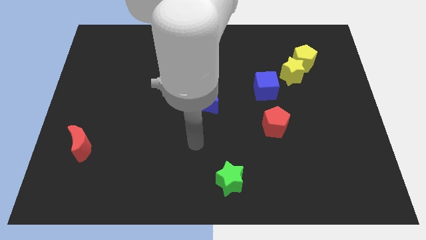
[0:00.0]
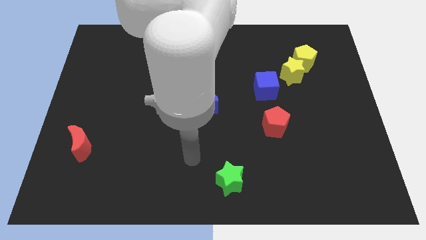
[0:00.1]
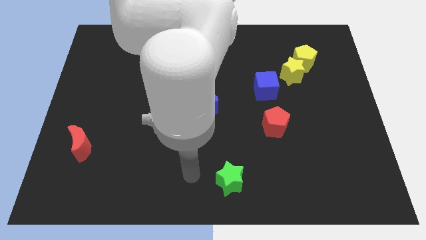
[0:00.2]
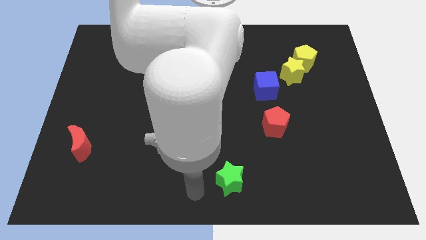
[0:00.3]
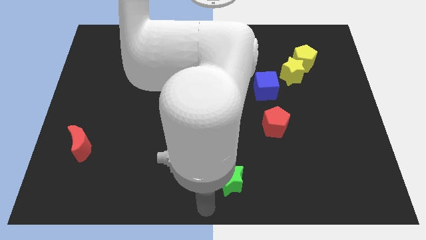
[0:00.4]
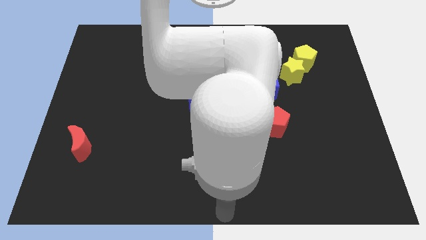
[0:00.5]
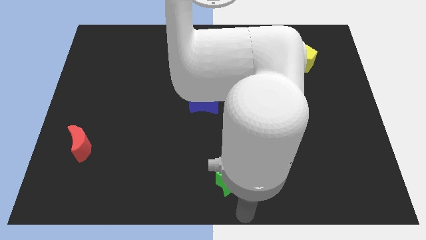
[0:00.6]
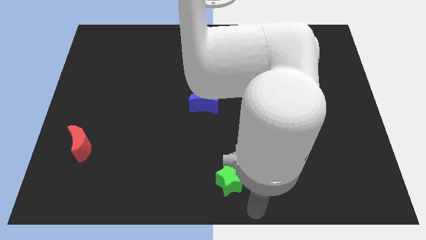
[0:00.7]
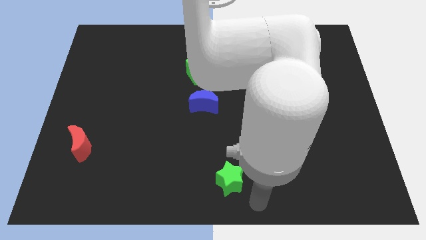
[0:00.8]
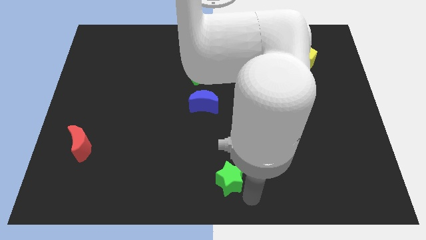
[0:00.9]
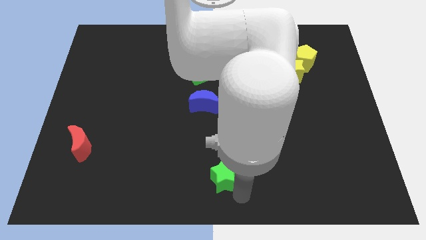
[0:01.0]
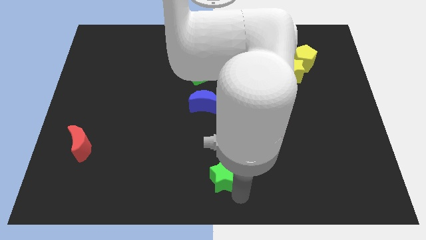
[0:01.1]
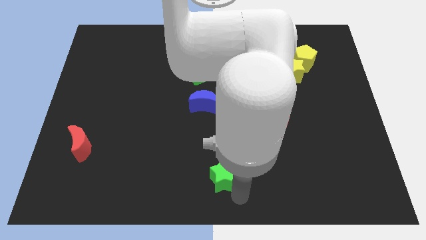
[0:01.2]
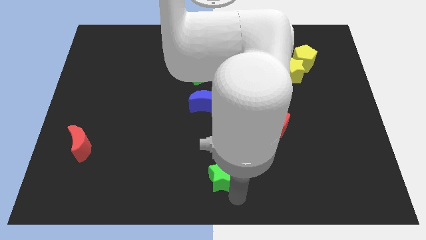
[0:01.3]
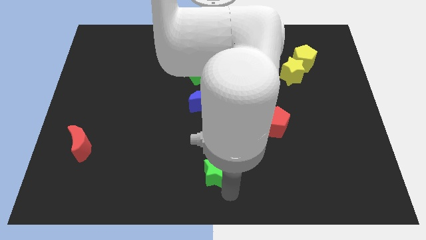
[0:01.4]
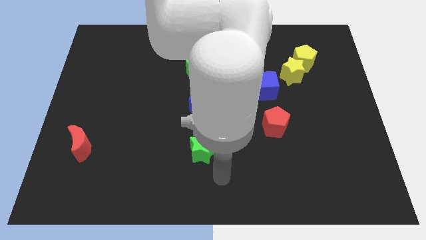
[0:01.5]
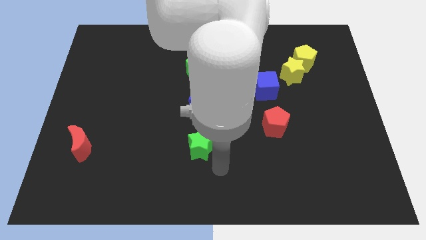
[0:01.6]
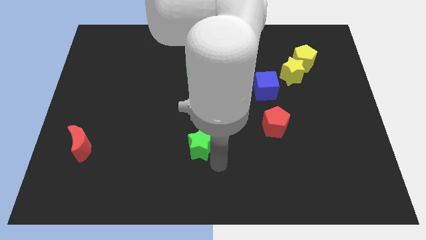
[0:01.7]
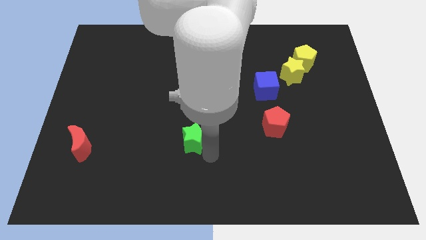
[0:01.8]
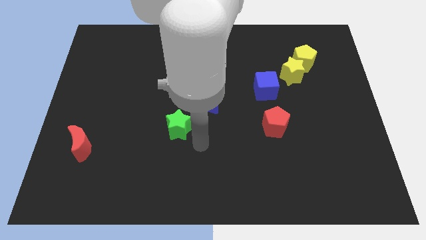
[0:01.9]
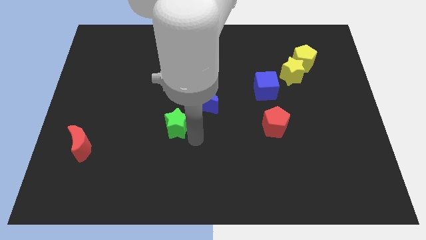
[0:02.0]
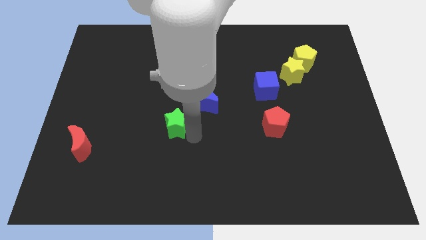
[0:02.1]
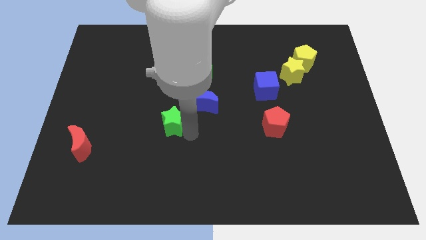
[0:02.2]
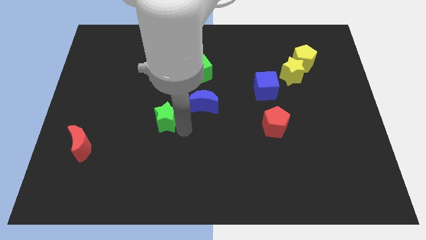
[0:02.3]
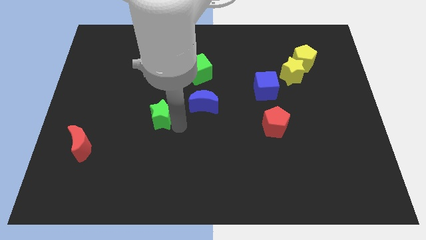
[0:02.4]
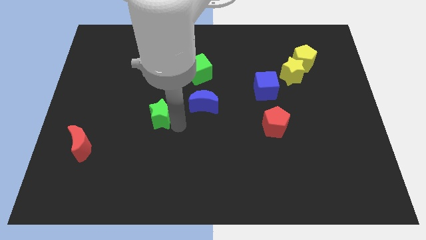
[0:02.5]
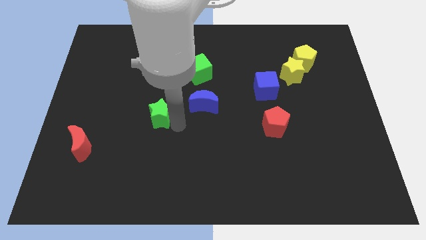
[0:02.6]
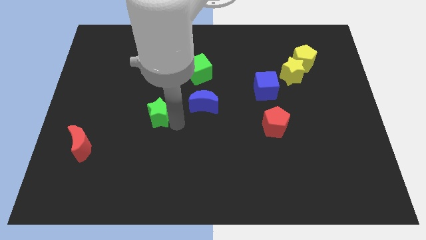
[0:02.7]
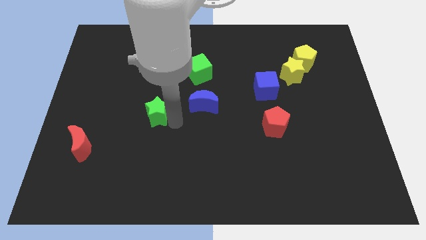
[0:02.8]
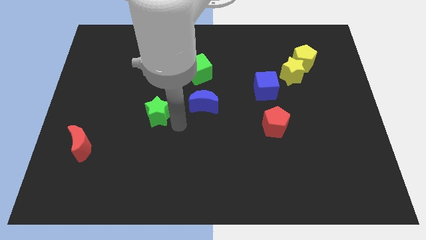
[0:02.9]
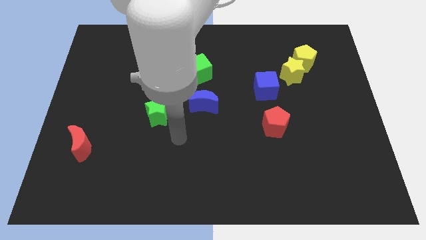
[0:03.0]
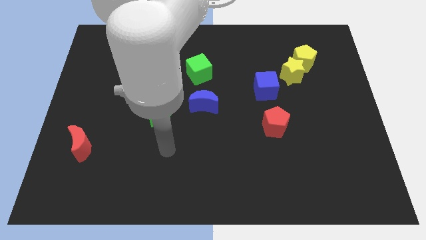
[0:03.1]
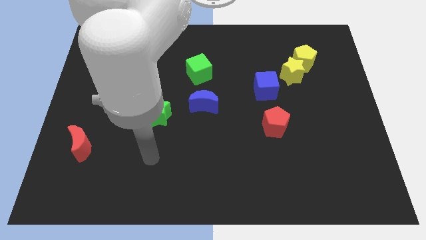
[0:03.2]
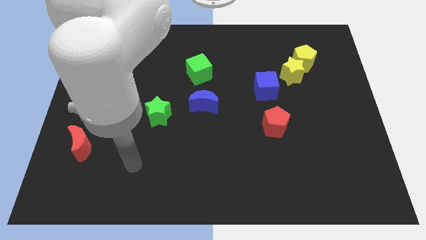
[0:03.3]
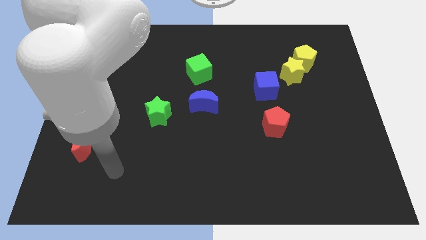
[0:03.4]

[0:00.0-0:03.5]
place the green star diagonally in between the blue crescent and red crescent

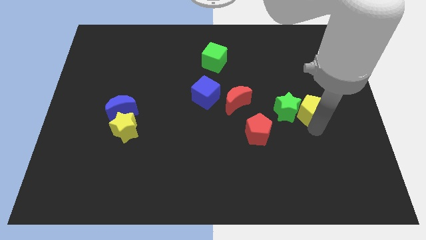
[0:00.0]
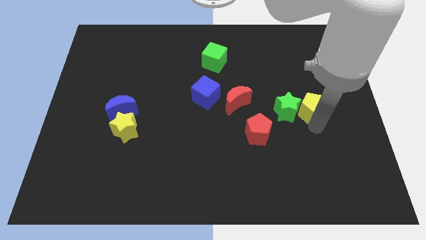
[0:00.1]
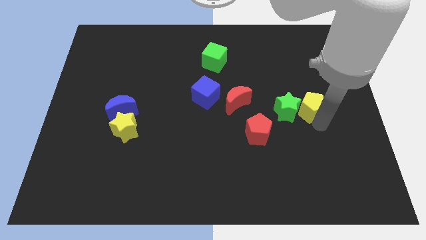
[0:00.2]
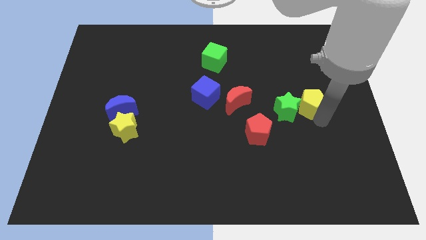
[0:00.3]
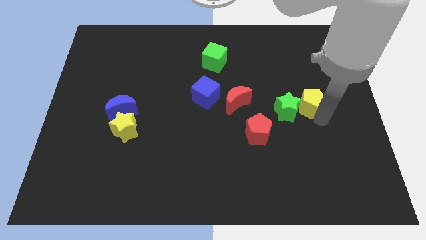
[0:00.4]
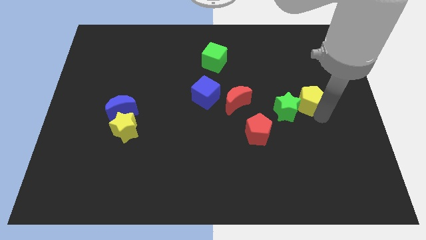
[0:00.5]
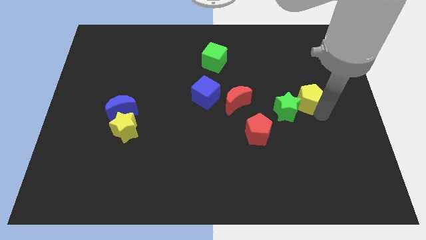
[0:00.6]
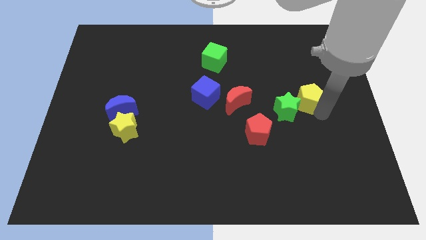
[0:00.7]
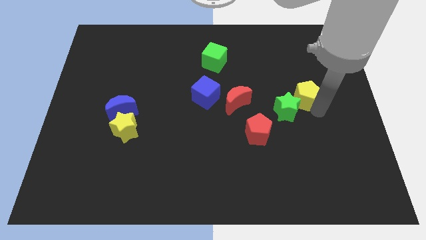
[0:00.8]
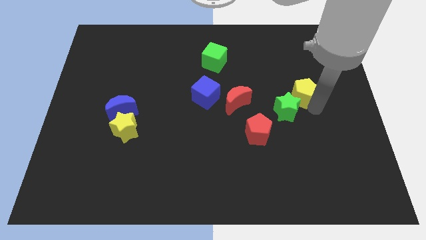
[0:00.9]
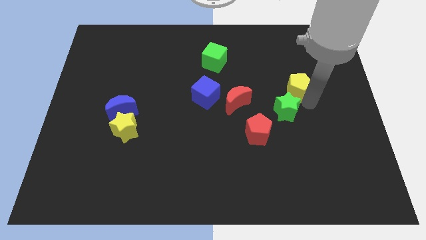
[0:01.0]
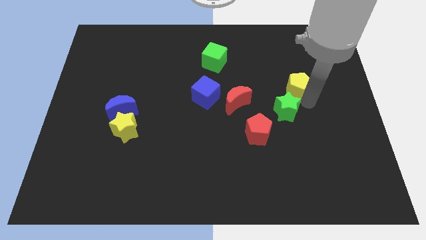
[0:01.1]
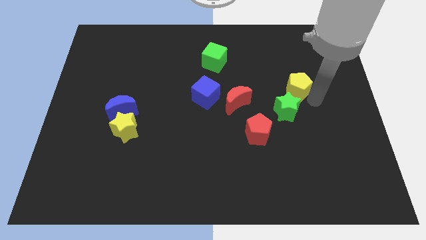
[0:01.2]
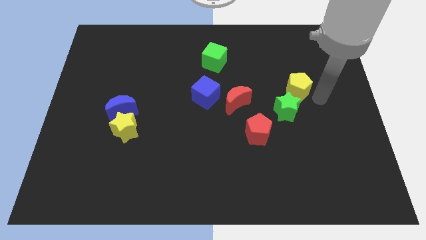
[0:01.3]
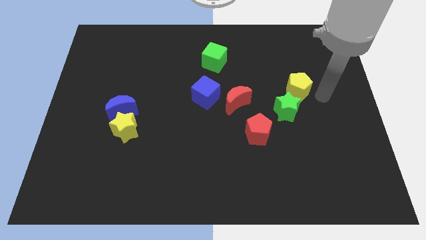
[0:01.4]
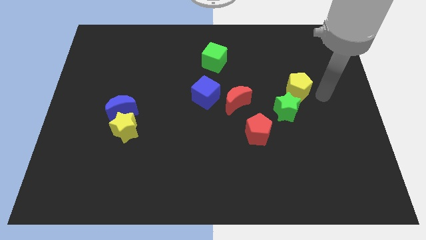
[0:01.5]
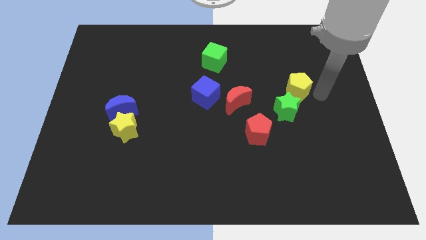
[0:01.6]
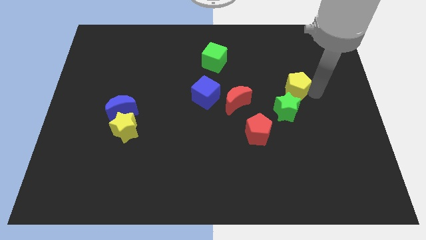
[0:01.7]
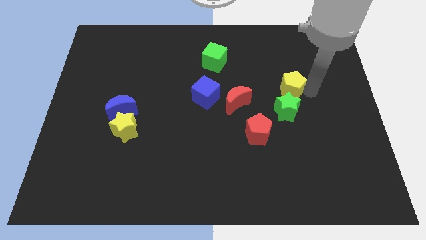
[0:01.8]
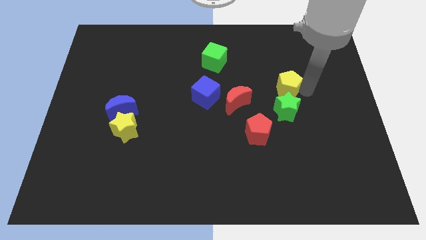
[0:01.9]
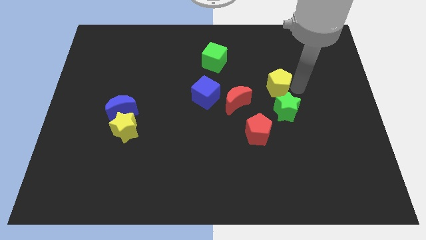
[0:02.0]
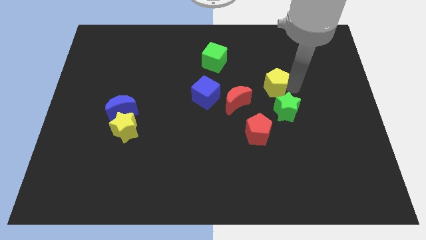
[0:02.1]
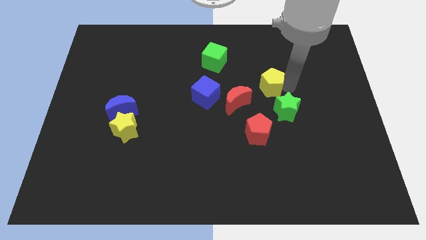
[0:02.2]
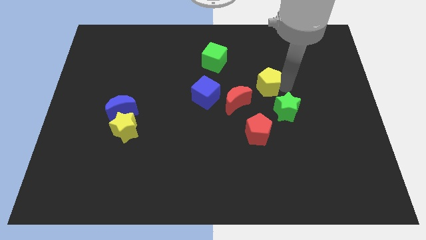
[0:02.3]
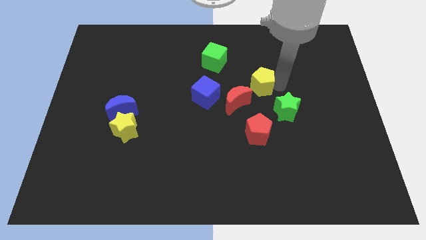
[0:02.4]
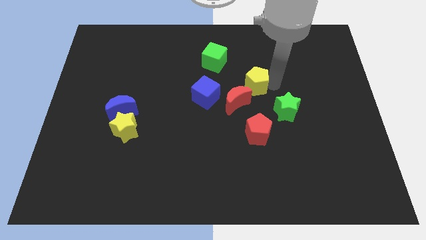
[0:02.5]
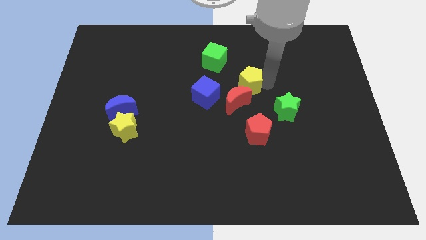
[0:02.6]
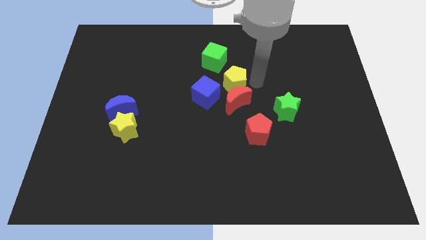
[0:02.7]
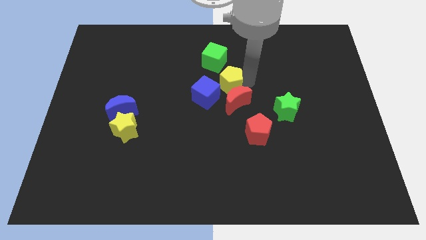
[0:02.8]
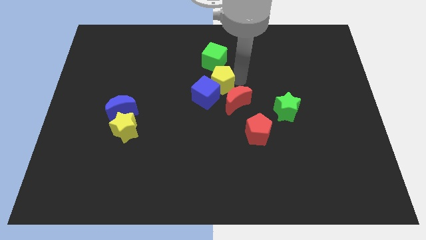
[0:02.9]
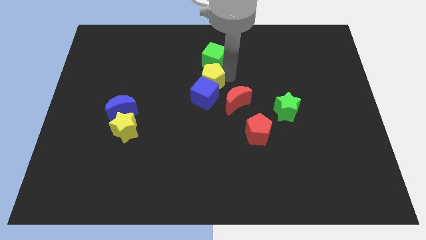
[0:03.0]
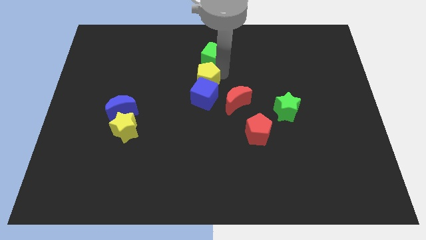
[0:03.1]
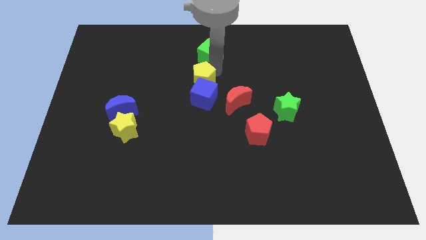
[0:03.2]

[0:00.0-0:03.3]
place the yellow pentagon in between the green cube and blue cube

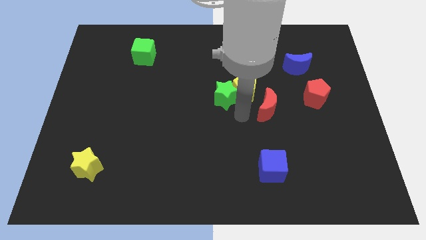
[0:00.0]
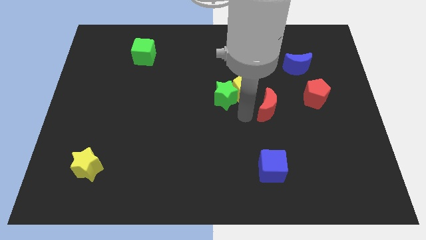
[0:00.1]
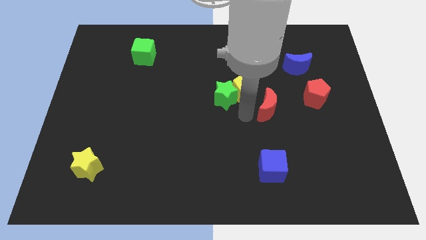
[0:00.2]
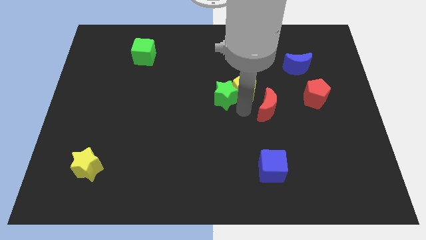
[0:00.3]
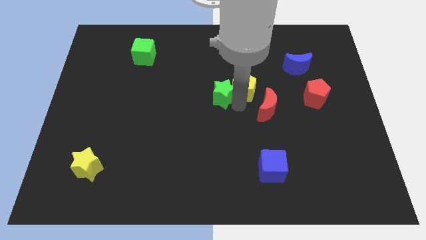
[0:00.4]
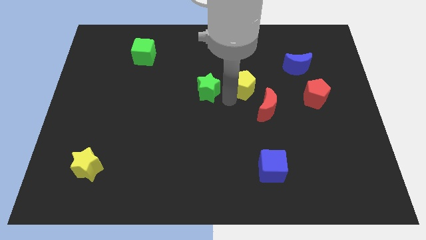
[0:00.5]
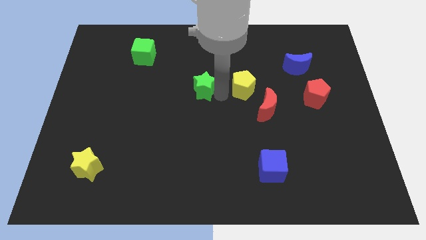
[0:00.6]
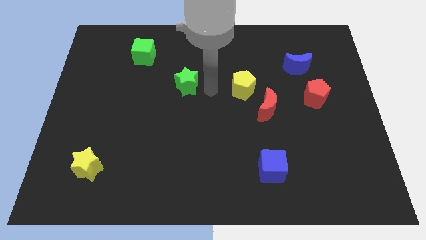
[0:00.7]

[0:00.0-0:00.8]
move the green star to the left of the yellow pentagon

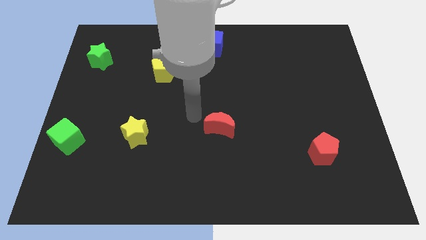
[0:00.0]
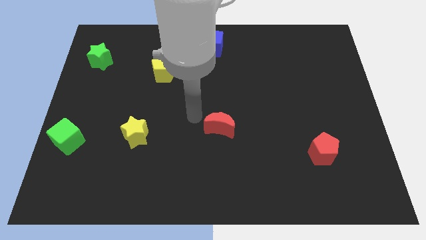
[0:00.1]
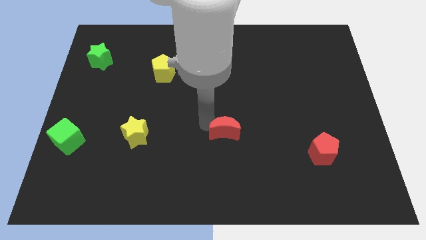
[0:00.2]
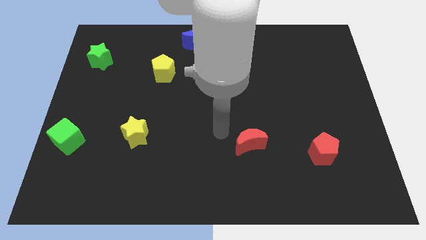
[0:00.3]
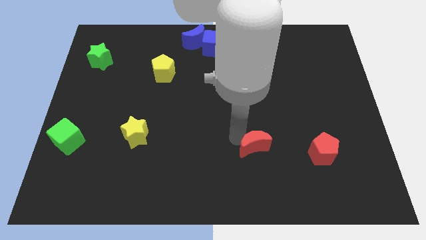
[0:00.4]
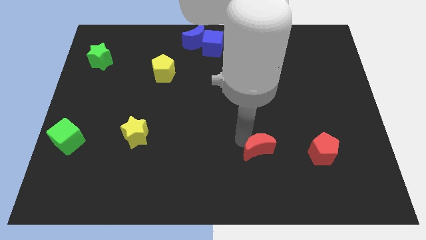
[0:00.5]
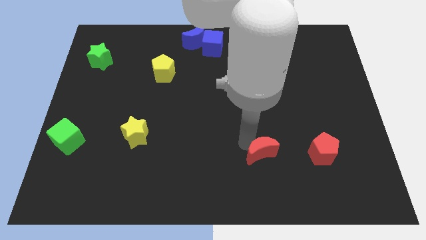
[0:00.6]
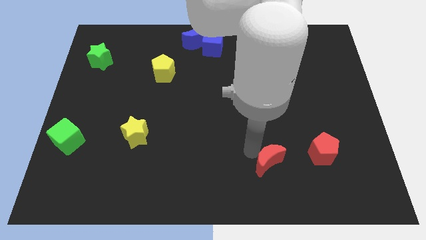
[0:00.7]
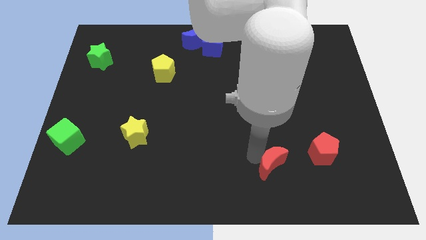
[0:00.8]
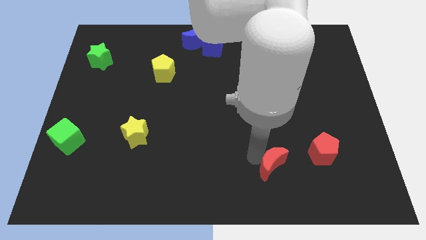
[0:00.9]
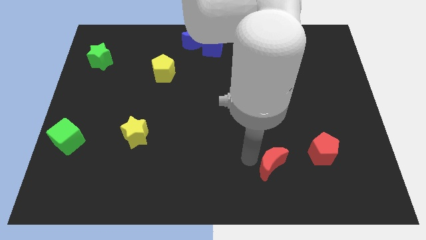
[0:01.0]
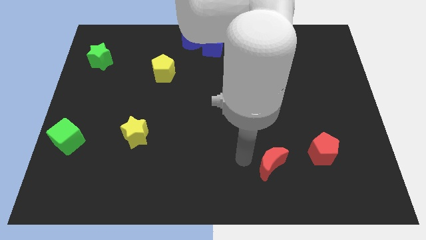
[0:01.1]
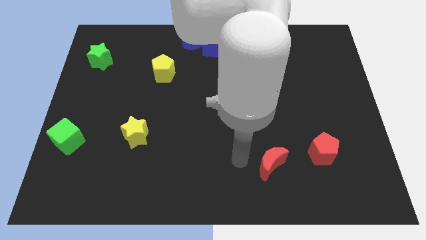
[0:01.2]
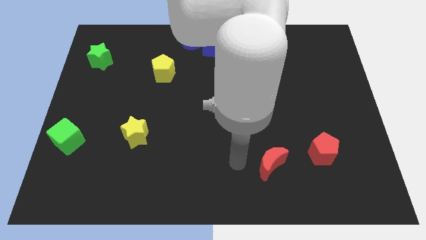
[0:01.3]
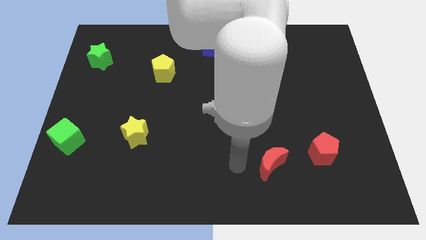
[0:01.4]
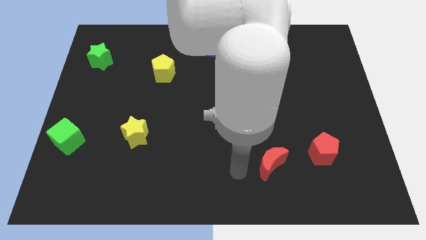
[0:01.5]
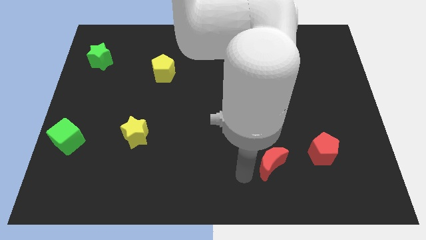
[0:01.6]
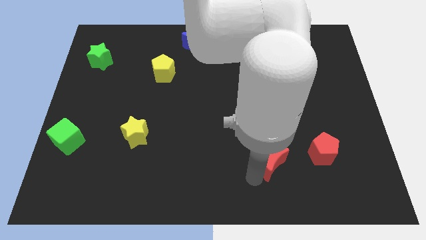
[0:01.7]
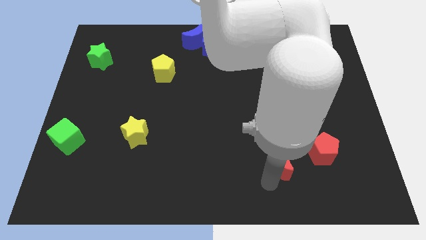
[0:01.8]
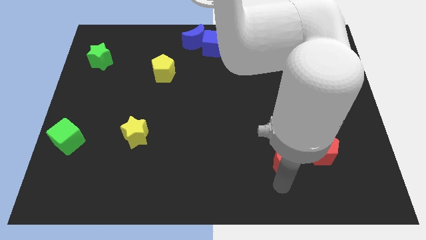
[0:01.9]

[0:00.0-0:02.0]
move the red moon parallel left to the red pentagon
